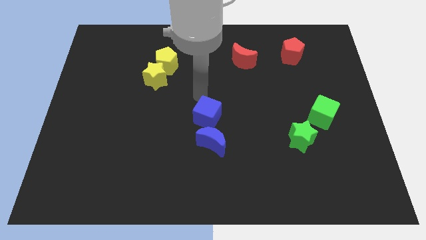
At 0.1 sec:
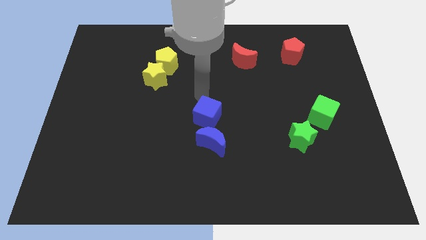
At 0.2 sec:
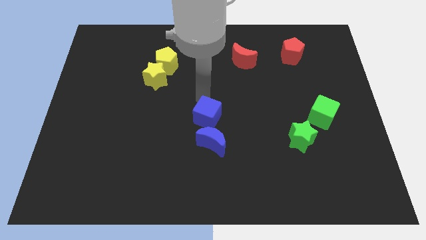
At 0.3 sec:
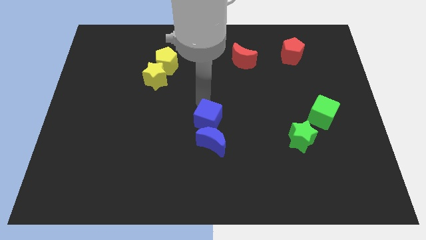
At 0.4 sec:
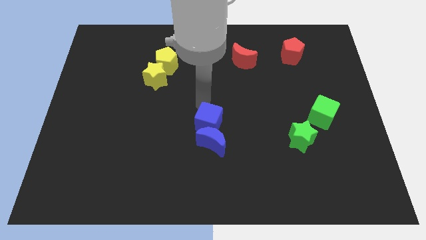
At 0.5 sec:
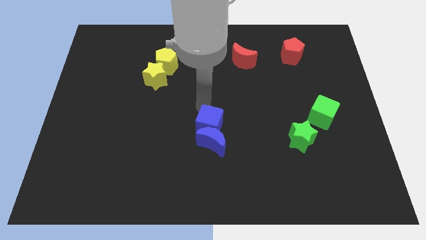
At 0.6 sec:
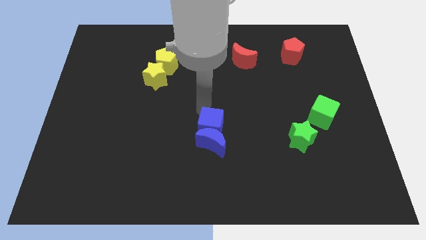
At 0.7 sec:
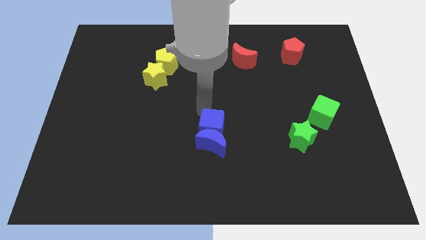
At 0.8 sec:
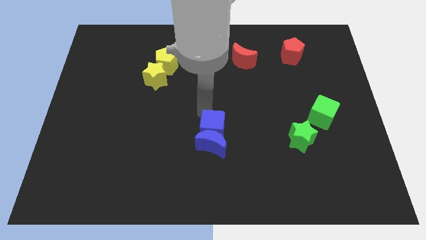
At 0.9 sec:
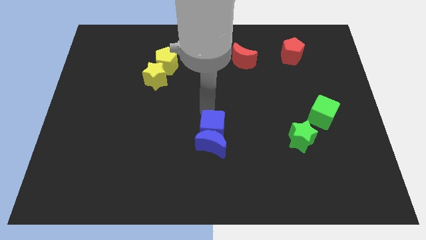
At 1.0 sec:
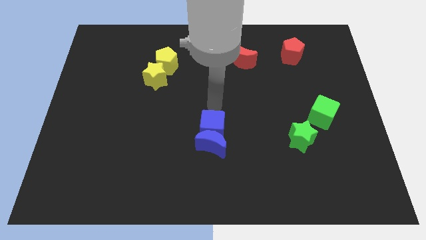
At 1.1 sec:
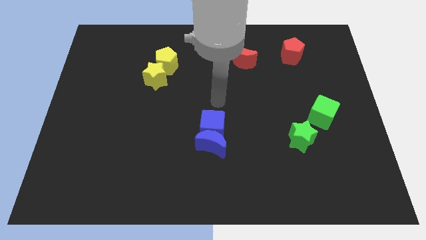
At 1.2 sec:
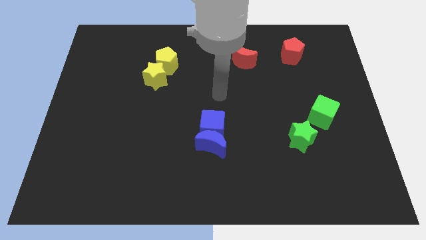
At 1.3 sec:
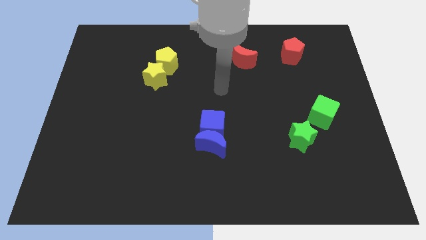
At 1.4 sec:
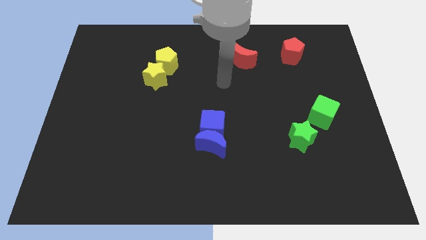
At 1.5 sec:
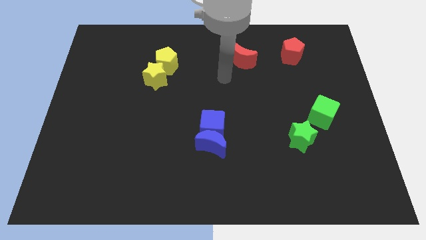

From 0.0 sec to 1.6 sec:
attach the blue cube to the blue moon

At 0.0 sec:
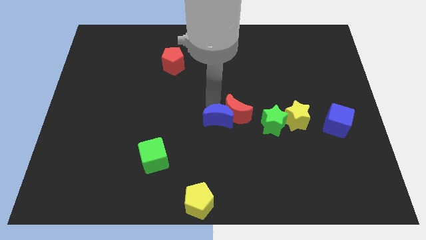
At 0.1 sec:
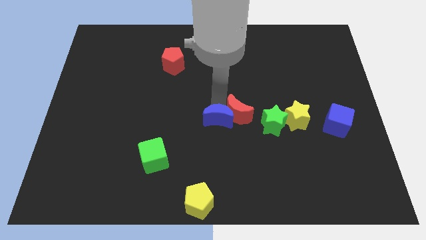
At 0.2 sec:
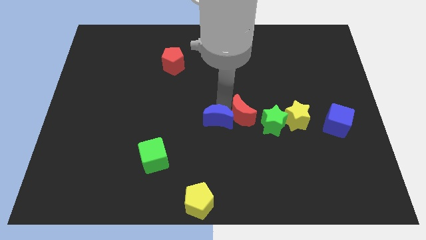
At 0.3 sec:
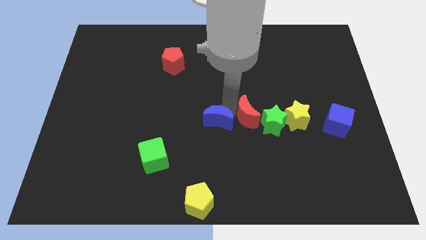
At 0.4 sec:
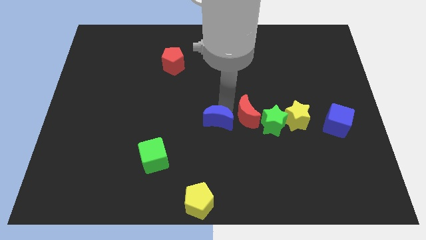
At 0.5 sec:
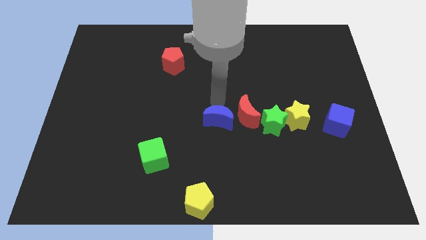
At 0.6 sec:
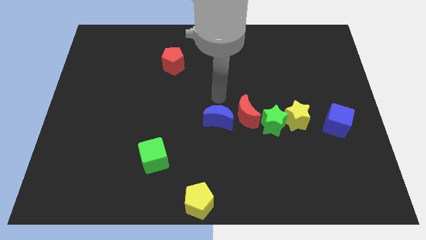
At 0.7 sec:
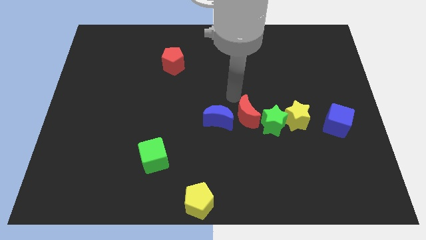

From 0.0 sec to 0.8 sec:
separate the red crescent away from the blue crescent

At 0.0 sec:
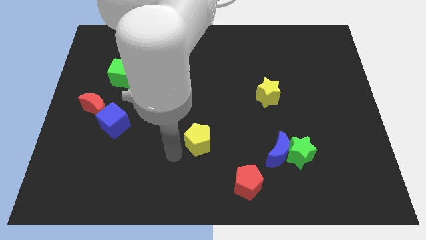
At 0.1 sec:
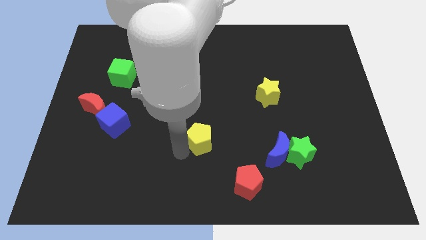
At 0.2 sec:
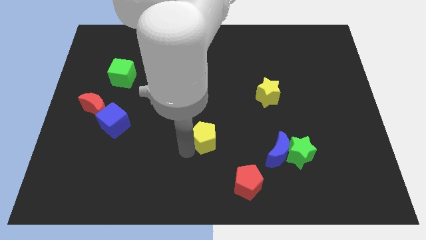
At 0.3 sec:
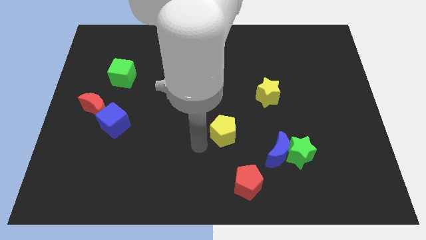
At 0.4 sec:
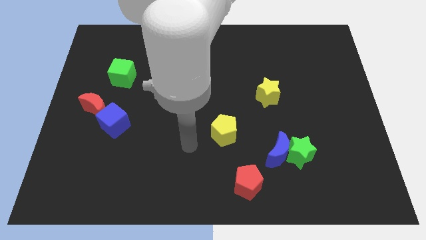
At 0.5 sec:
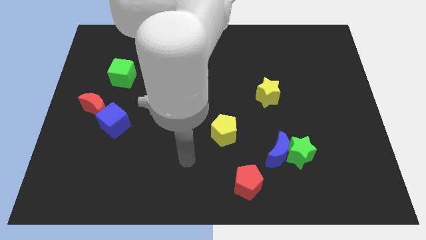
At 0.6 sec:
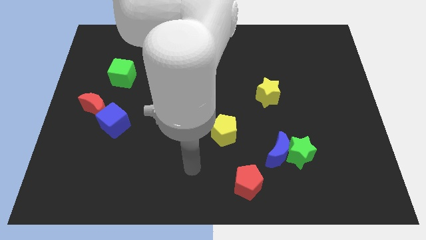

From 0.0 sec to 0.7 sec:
place the yellow pentagon left to the blue moon

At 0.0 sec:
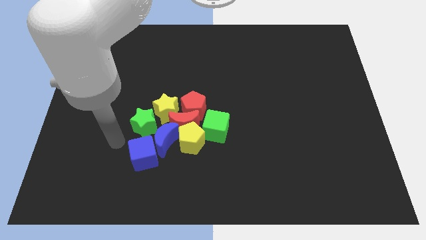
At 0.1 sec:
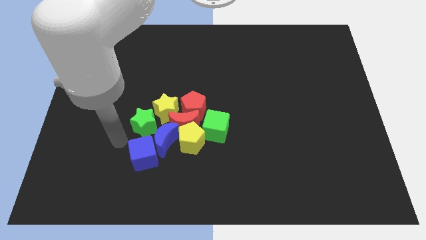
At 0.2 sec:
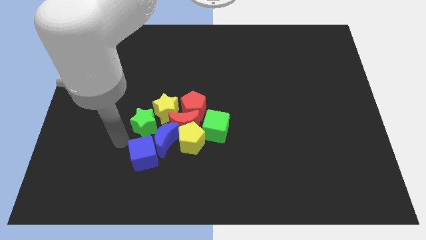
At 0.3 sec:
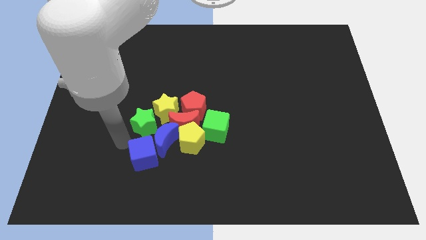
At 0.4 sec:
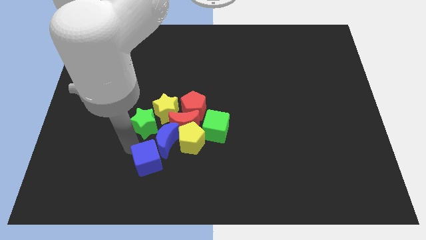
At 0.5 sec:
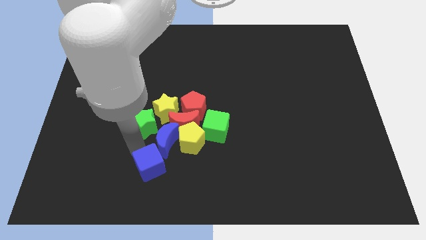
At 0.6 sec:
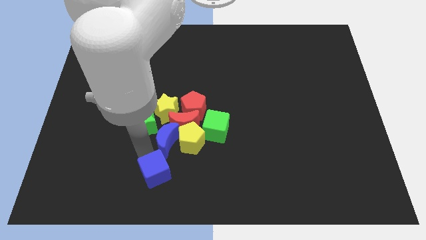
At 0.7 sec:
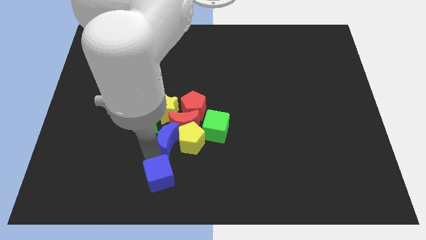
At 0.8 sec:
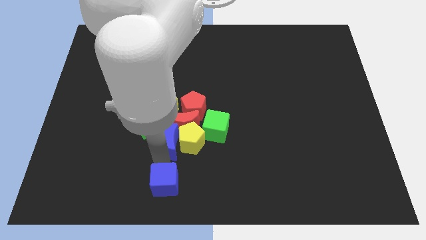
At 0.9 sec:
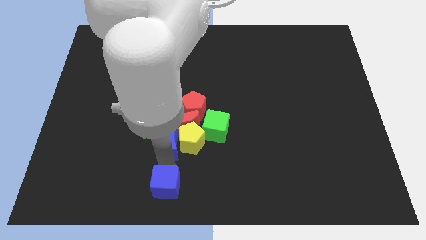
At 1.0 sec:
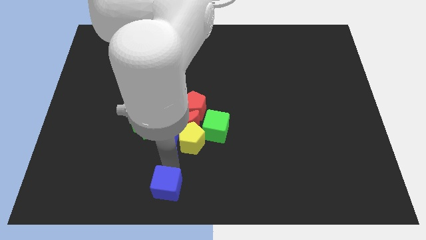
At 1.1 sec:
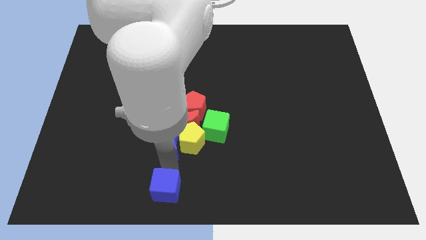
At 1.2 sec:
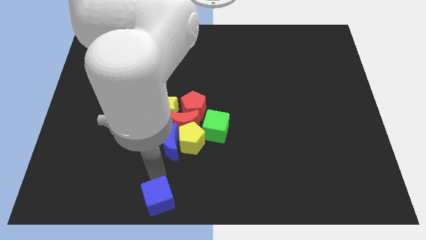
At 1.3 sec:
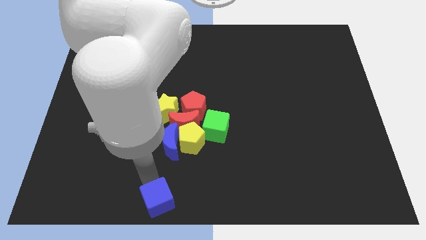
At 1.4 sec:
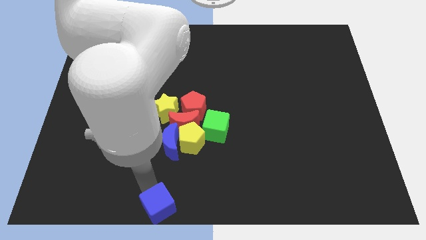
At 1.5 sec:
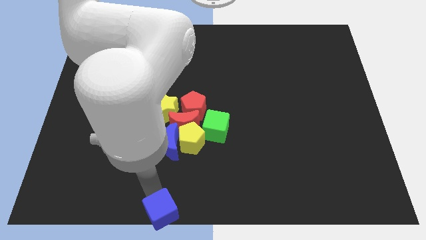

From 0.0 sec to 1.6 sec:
separate the blue cube from the blue moon

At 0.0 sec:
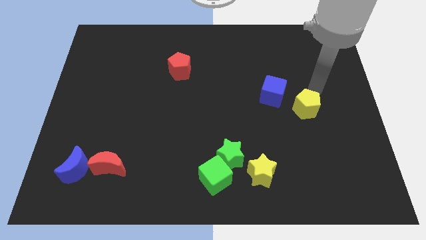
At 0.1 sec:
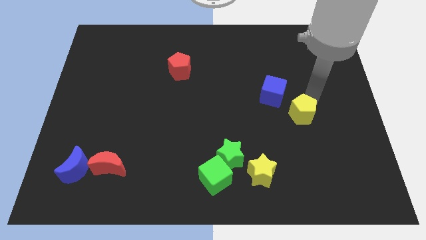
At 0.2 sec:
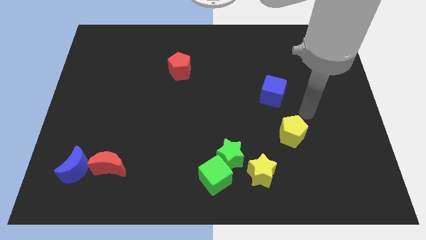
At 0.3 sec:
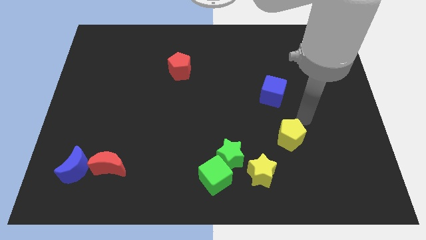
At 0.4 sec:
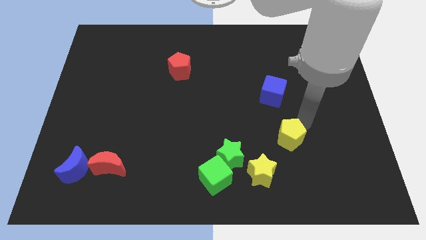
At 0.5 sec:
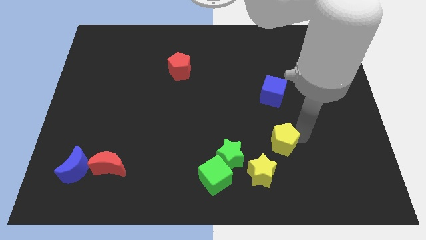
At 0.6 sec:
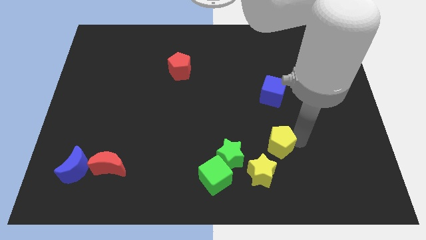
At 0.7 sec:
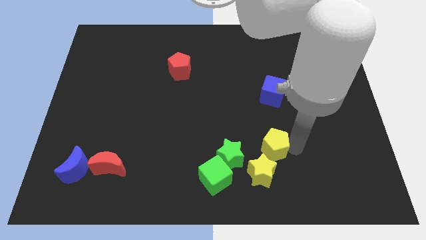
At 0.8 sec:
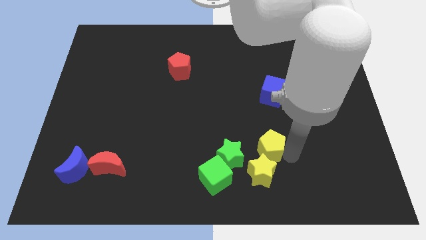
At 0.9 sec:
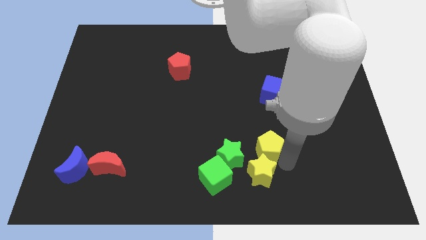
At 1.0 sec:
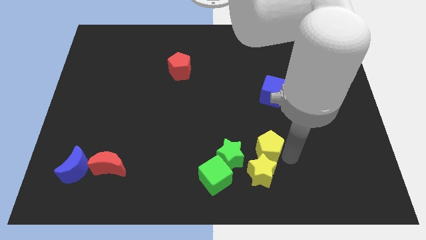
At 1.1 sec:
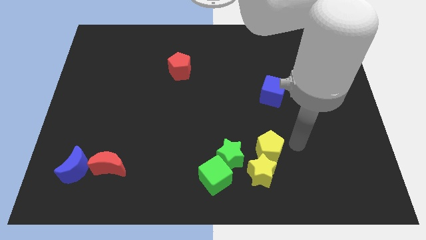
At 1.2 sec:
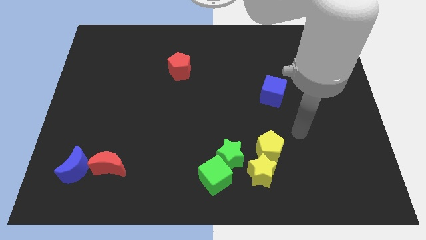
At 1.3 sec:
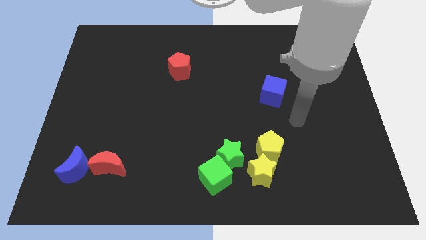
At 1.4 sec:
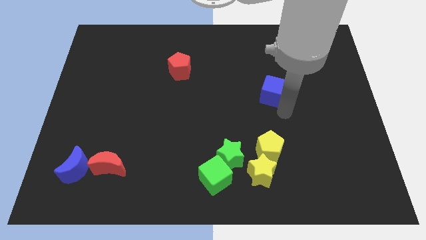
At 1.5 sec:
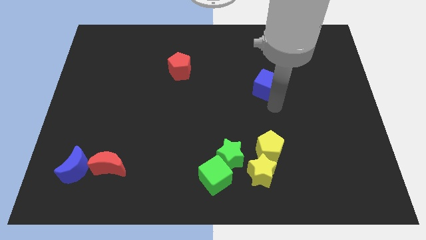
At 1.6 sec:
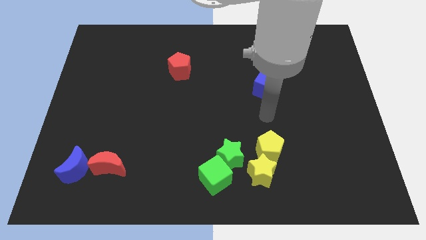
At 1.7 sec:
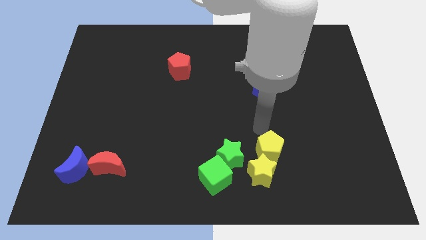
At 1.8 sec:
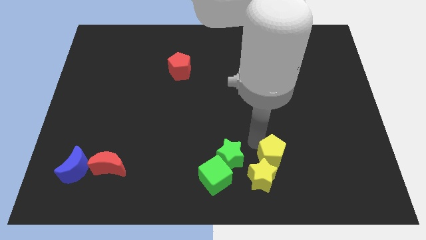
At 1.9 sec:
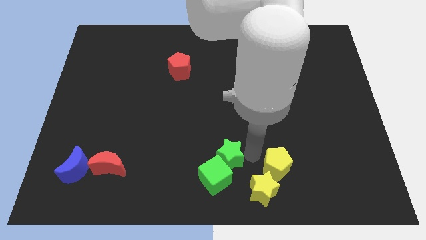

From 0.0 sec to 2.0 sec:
move the yellow pentagon right to the green star

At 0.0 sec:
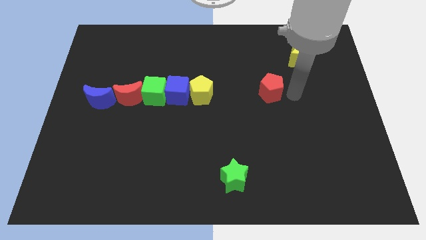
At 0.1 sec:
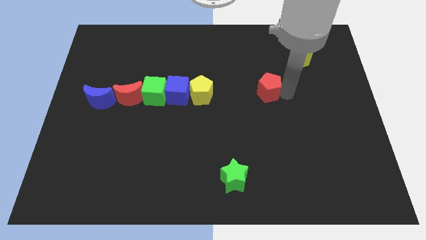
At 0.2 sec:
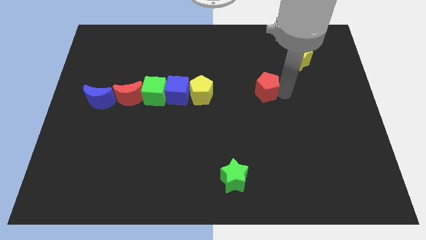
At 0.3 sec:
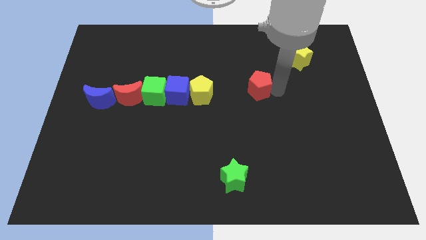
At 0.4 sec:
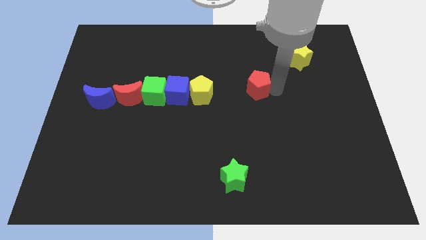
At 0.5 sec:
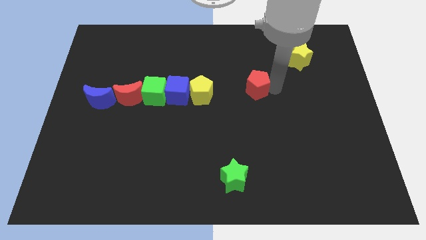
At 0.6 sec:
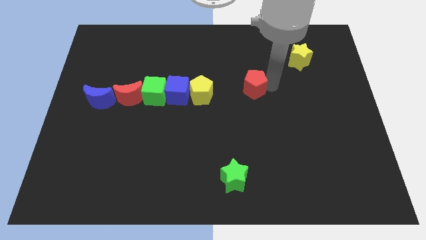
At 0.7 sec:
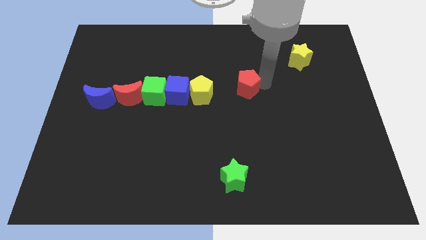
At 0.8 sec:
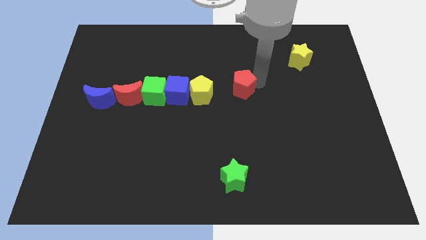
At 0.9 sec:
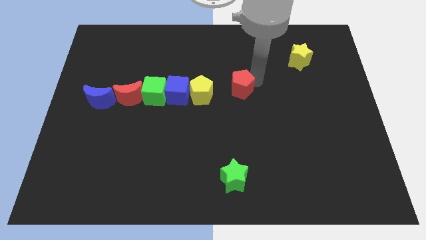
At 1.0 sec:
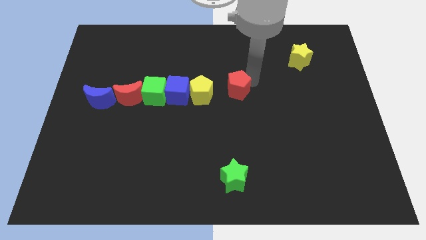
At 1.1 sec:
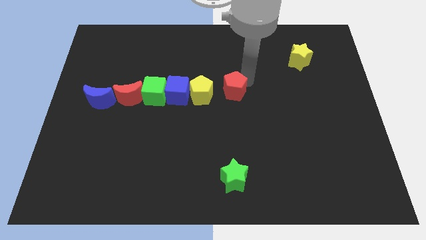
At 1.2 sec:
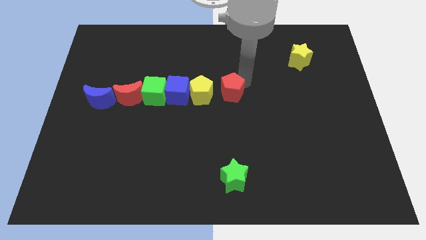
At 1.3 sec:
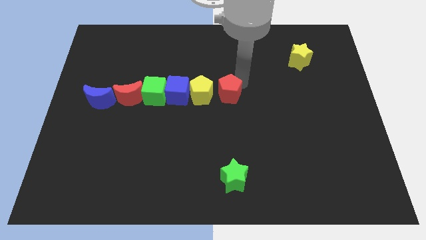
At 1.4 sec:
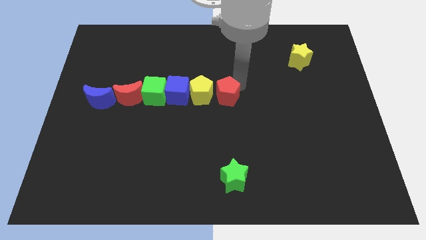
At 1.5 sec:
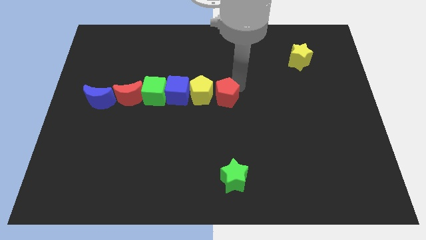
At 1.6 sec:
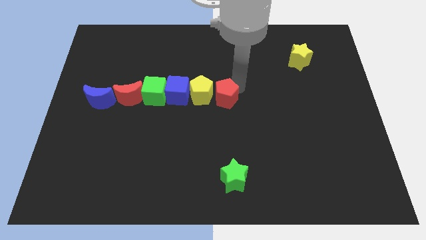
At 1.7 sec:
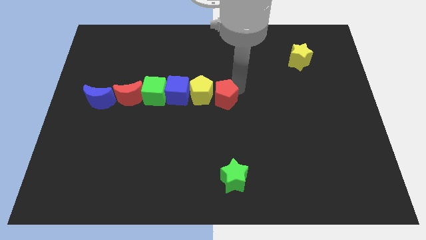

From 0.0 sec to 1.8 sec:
place the red pentagon to the right of the yellow pentagon

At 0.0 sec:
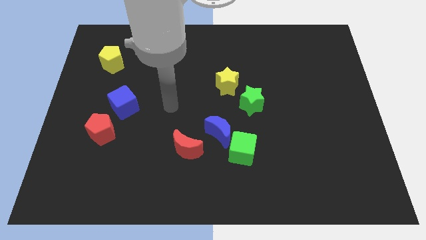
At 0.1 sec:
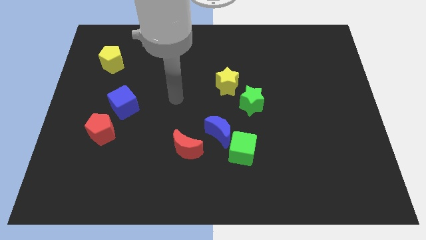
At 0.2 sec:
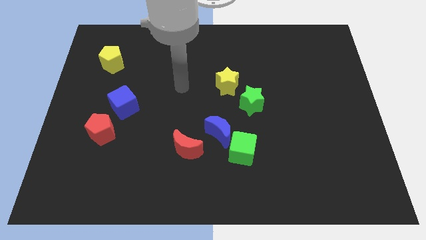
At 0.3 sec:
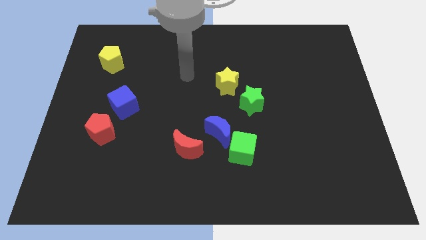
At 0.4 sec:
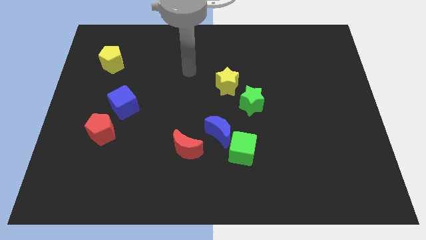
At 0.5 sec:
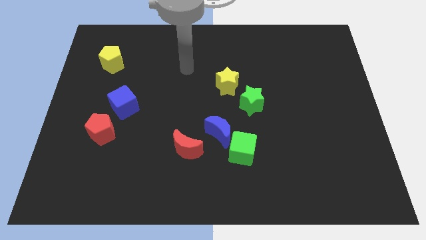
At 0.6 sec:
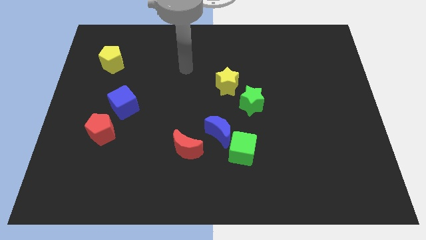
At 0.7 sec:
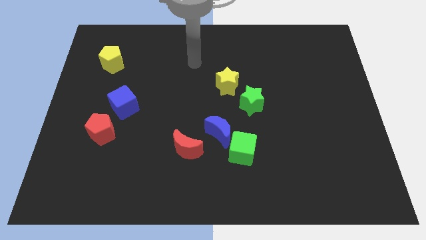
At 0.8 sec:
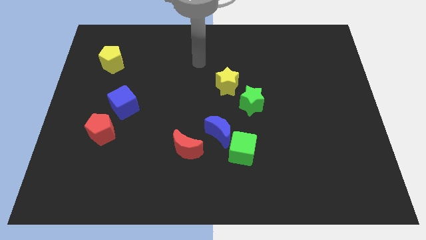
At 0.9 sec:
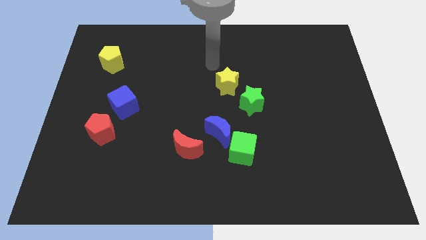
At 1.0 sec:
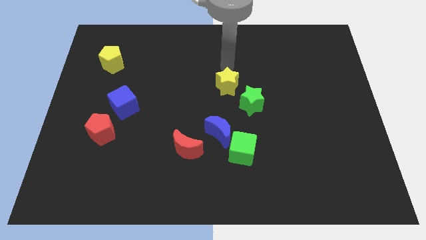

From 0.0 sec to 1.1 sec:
place your arm at the top of yellow star
